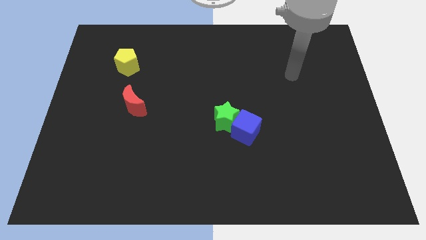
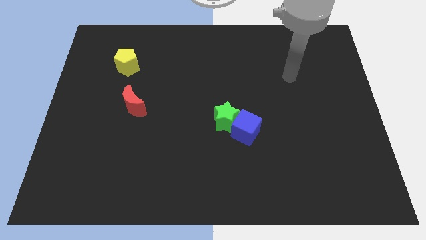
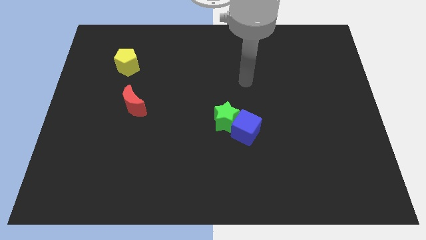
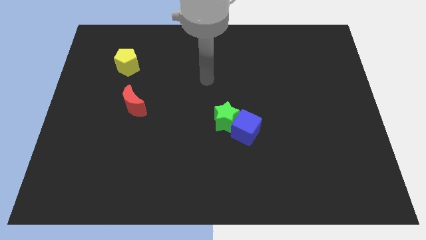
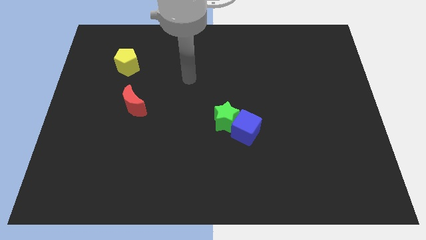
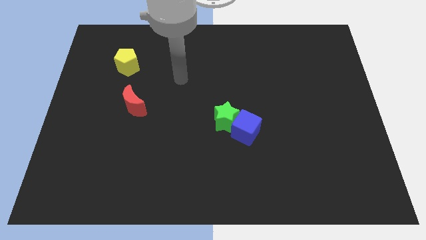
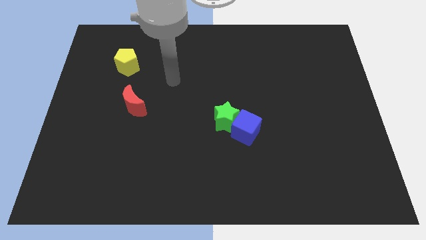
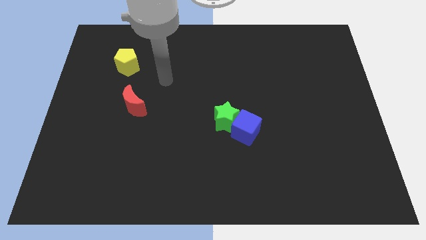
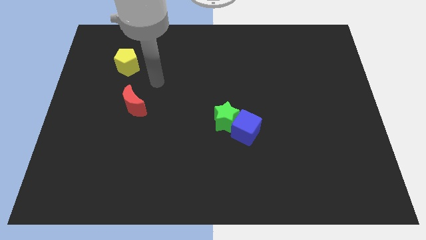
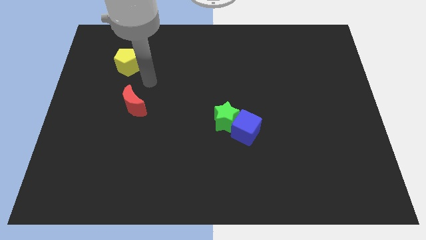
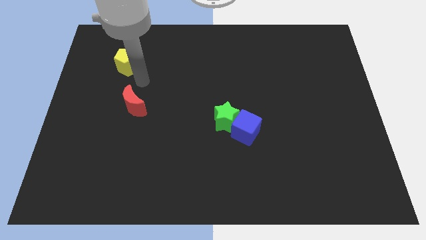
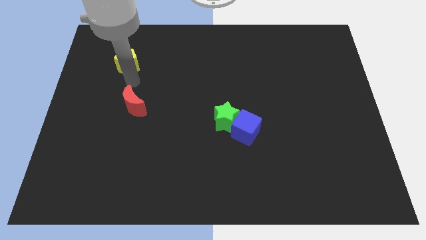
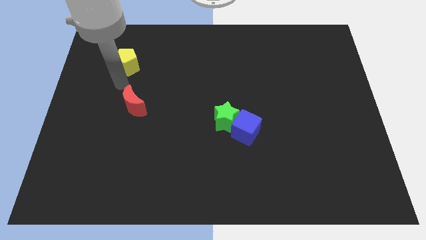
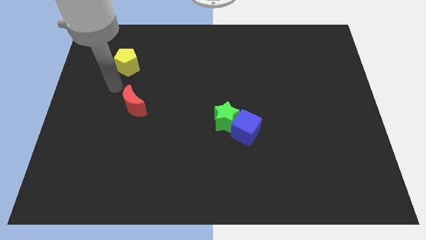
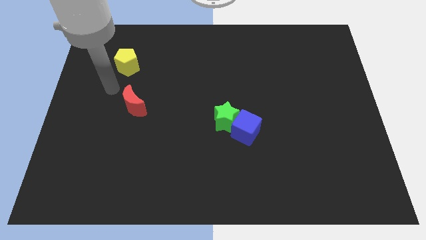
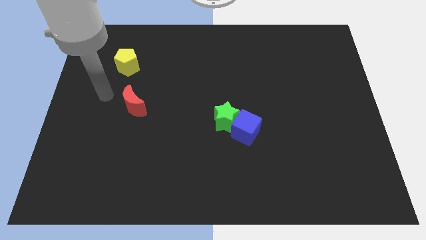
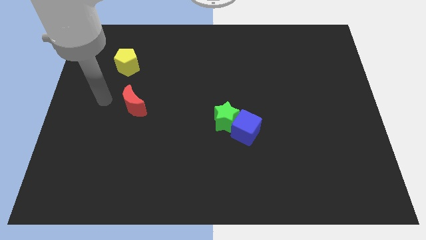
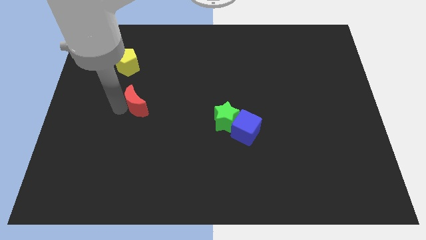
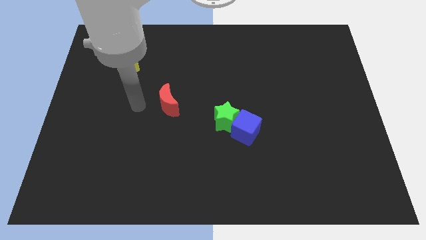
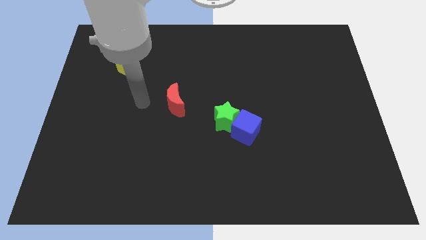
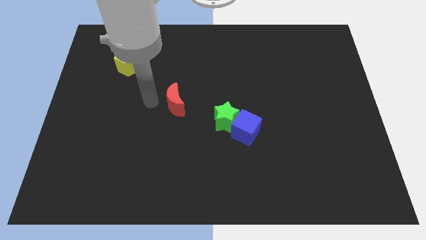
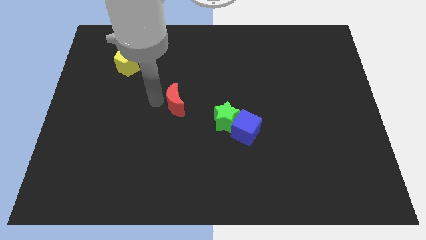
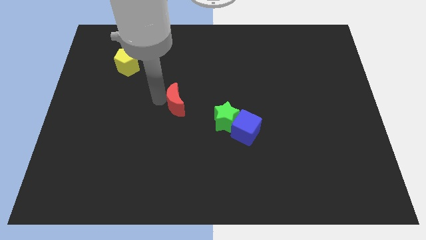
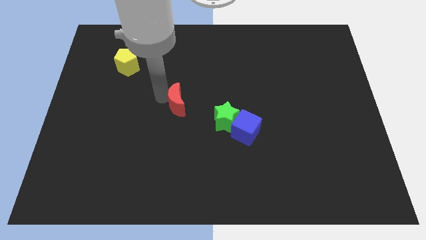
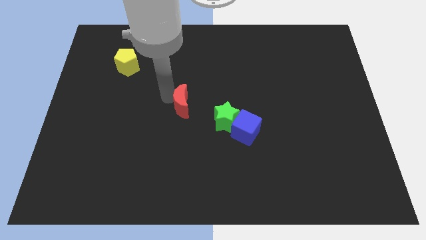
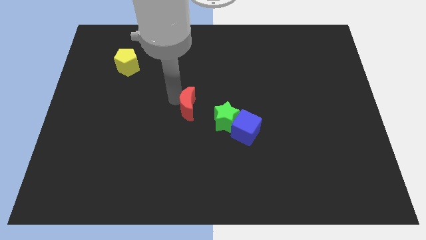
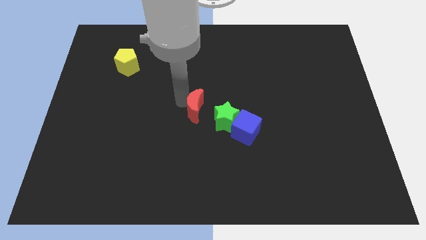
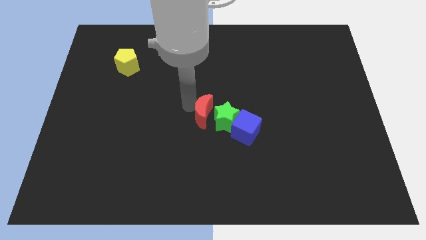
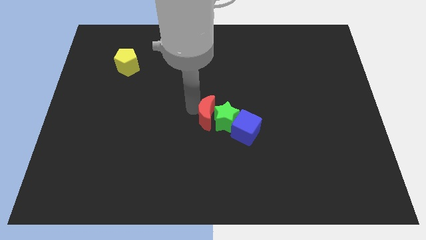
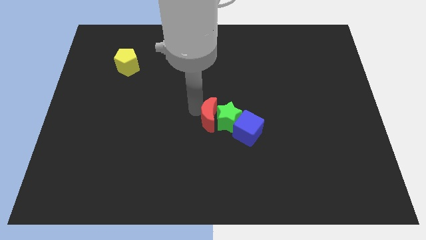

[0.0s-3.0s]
move the moon close to the star

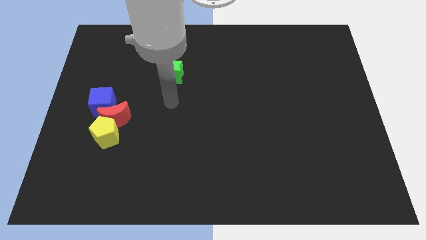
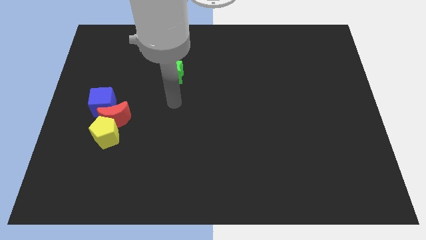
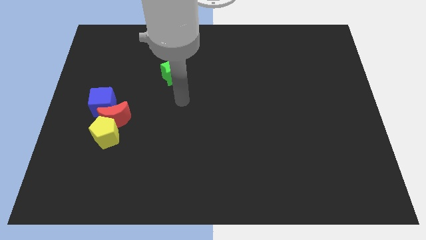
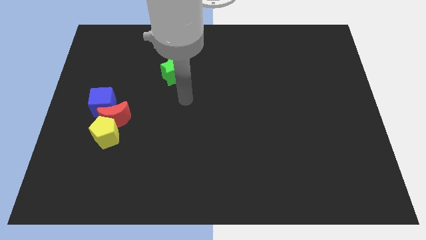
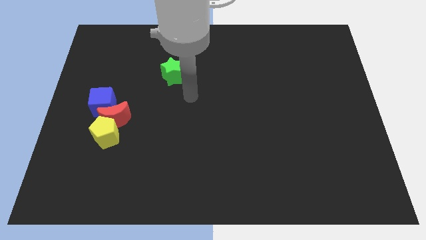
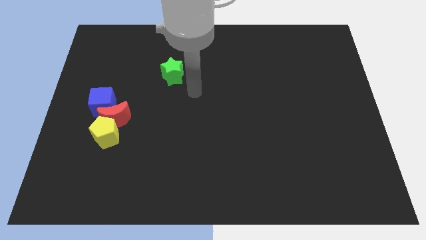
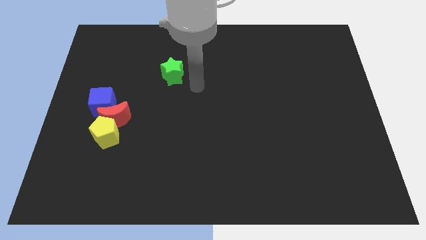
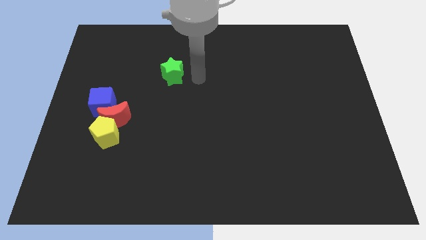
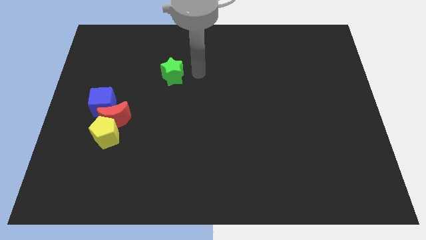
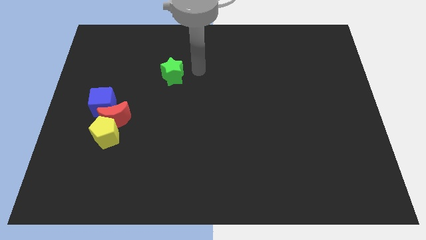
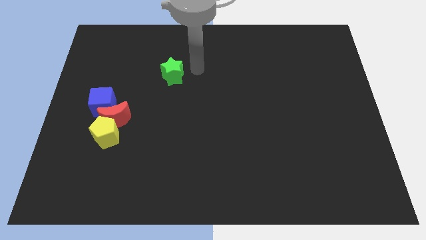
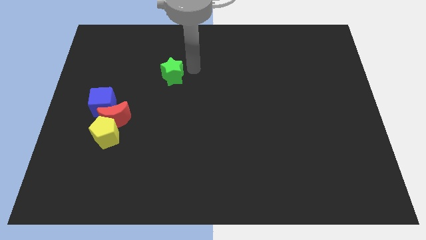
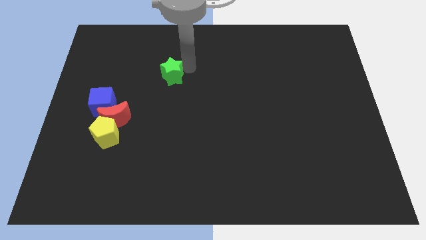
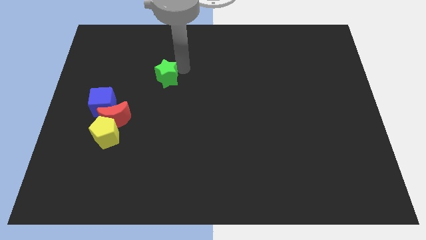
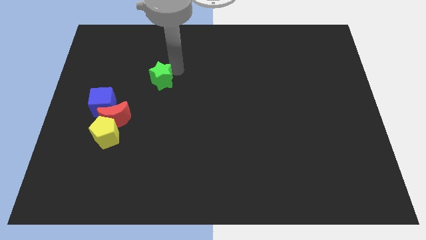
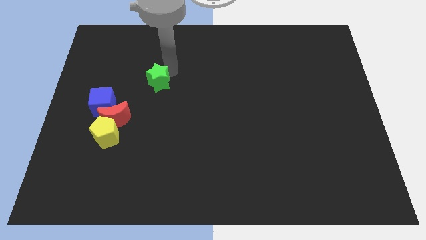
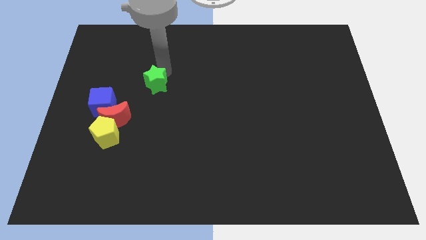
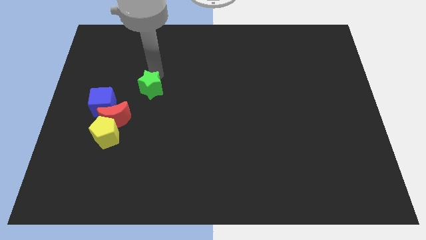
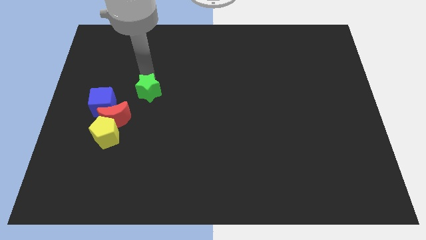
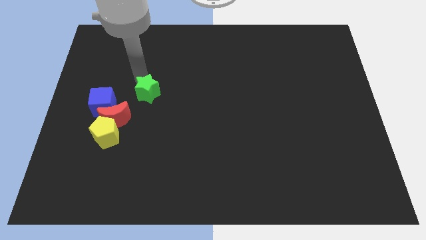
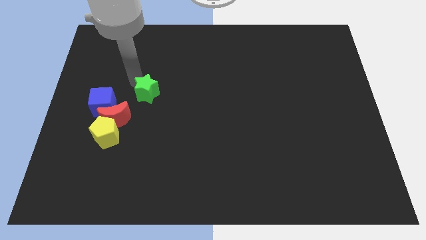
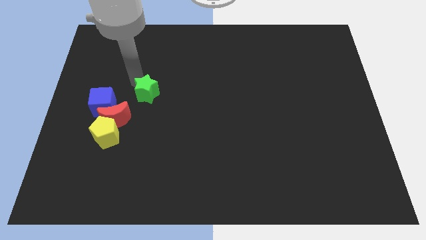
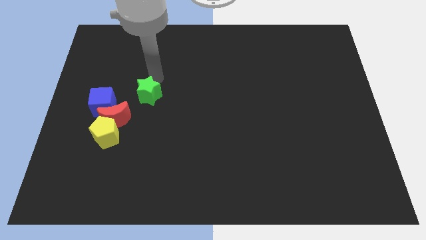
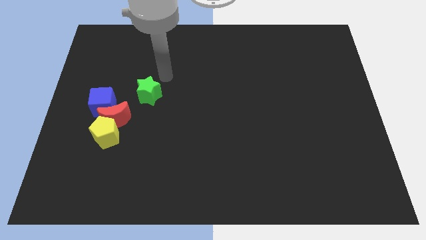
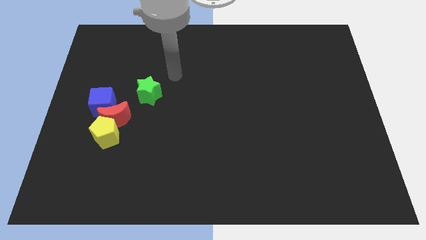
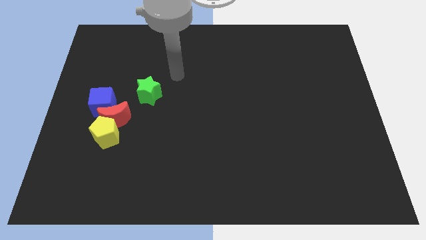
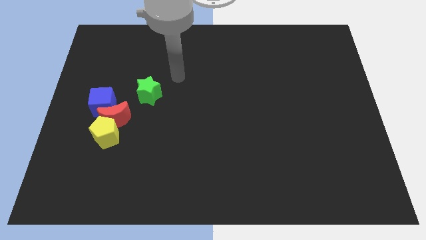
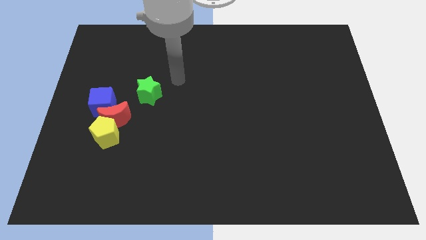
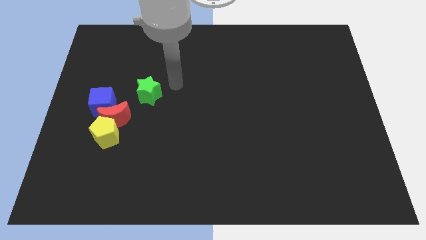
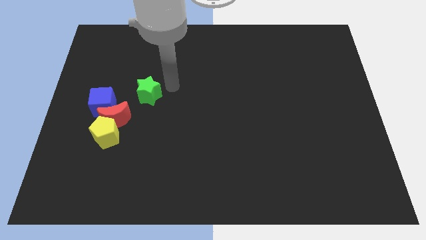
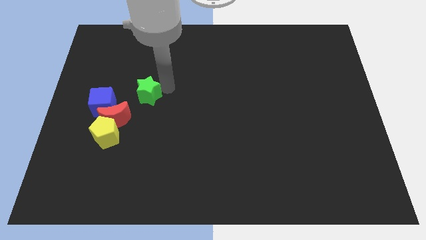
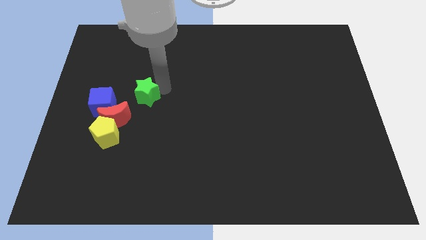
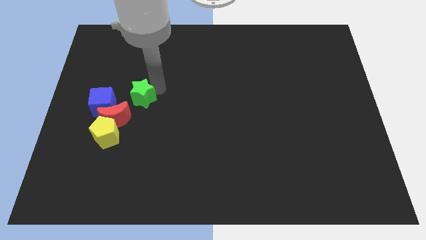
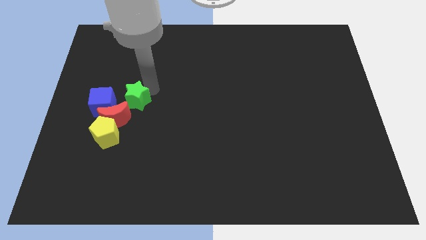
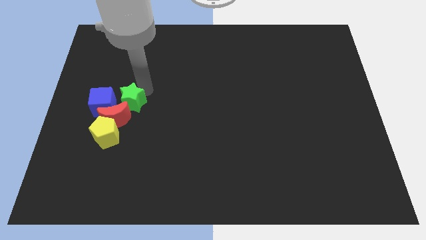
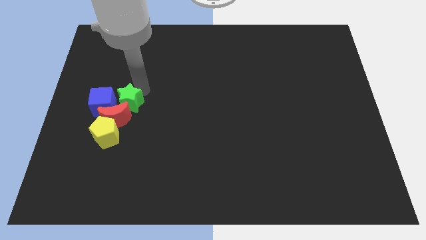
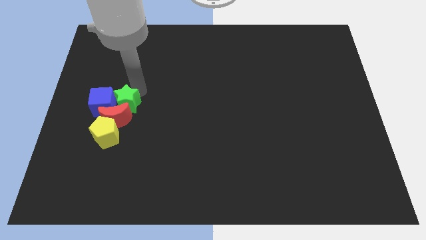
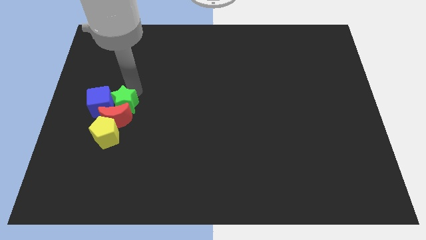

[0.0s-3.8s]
put the star close to the blue block

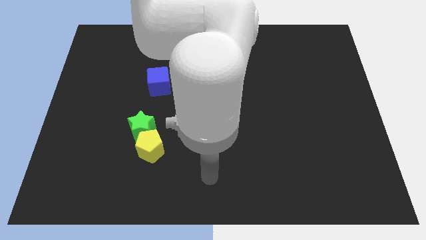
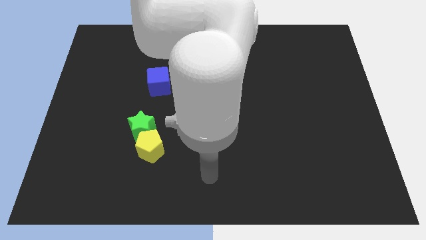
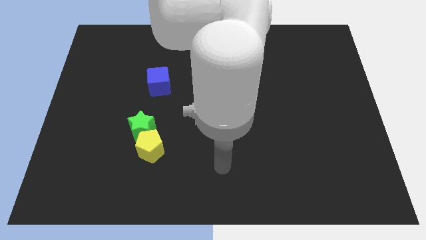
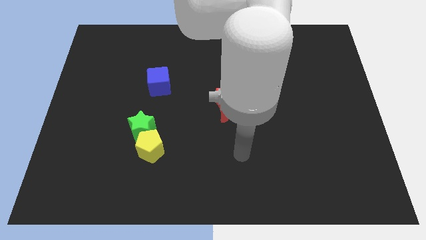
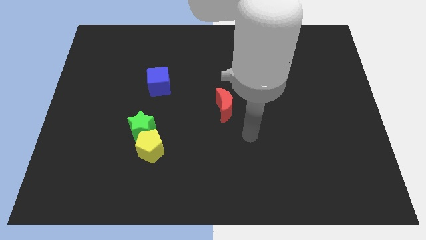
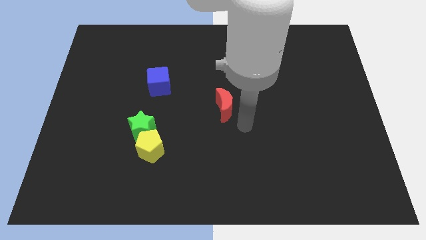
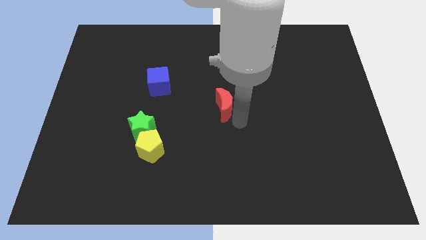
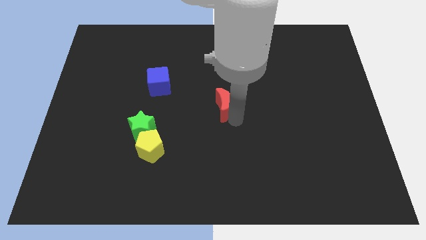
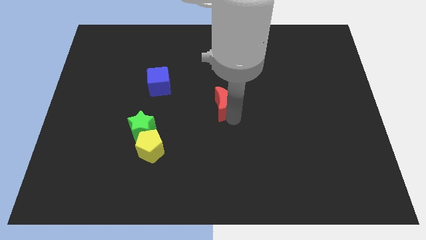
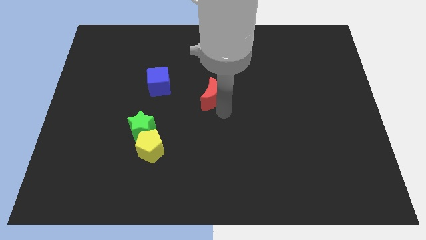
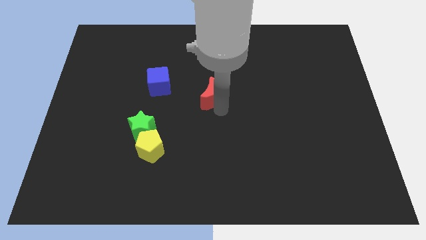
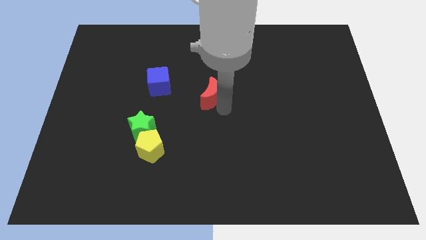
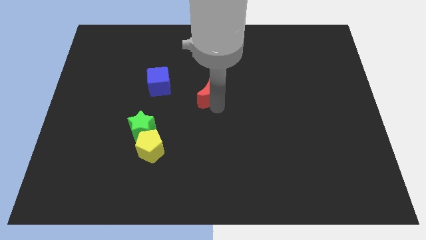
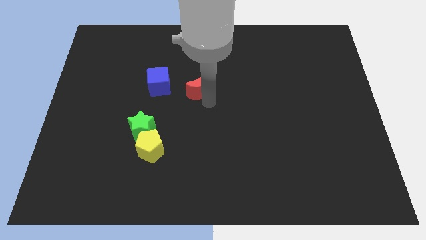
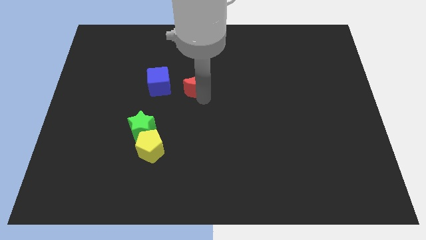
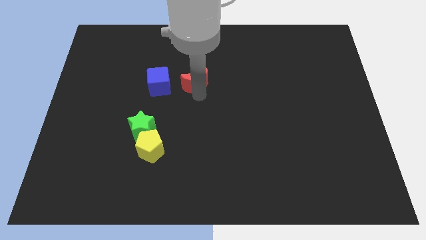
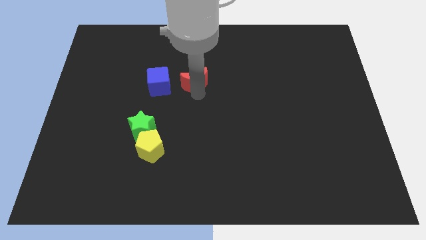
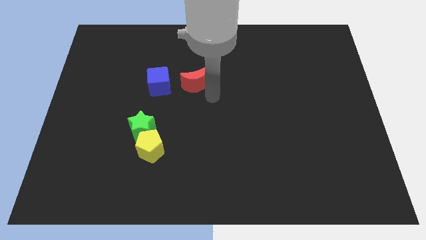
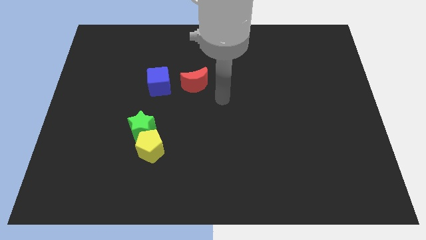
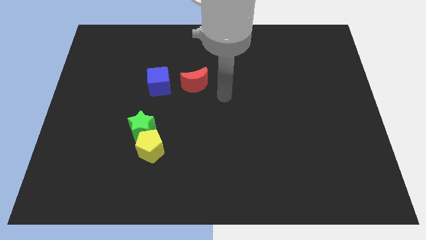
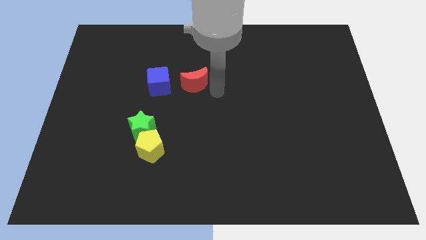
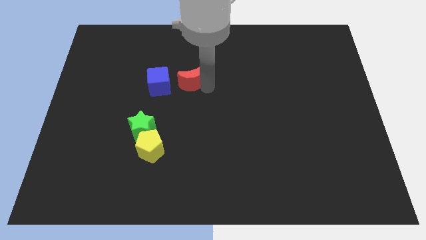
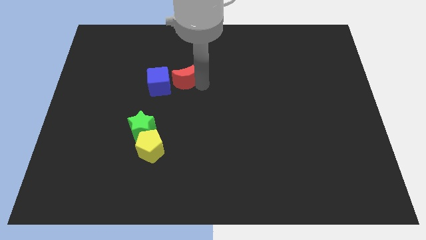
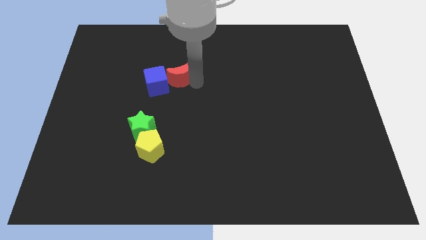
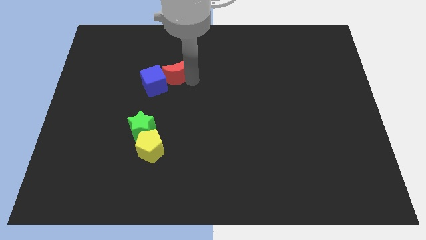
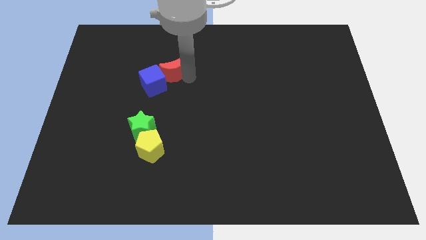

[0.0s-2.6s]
slide the red moon towards the cube
